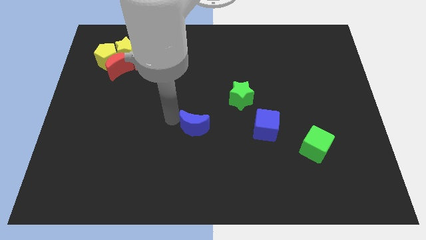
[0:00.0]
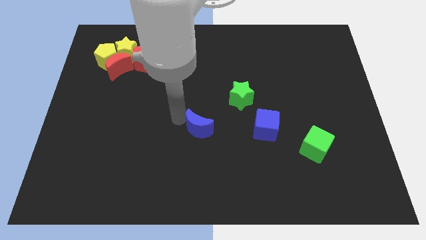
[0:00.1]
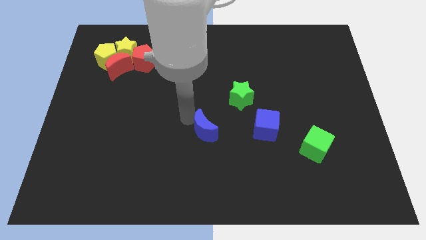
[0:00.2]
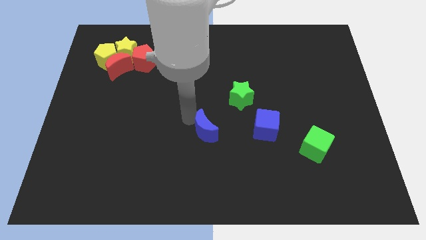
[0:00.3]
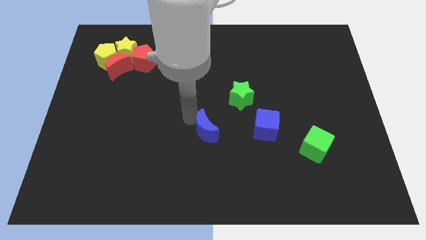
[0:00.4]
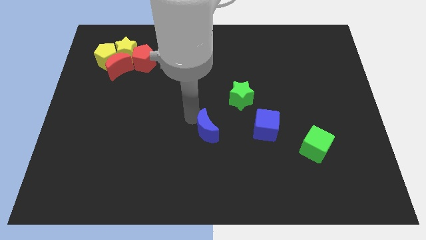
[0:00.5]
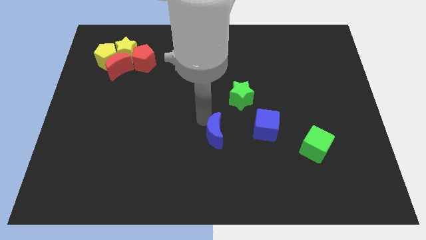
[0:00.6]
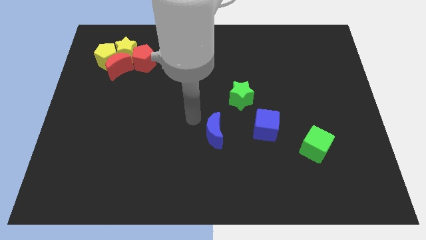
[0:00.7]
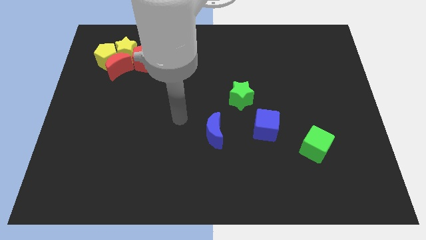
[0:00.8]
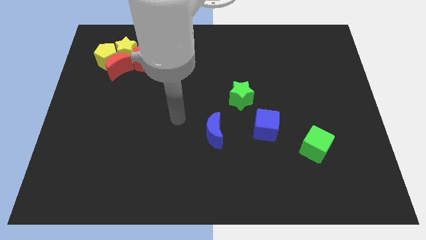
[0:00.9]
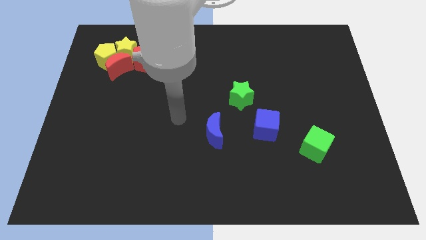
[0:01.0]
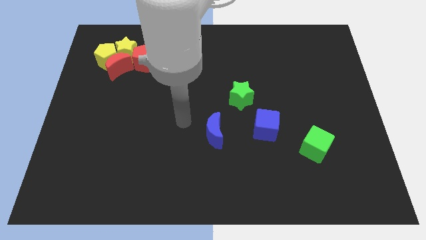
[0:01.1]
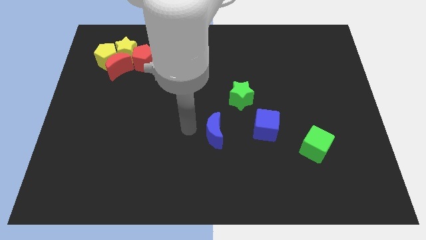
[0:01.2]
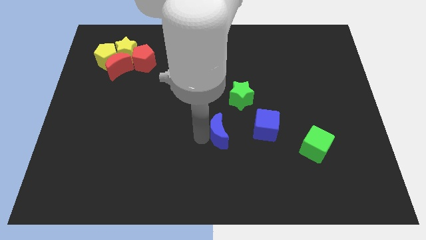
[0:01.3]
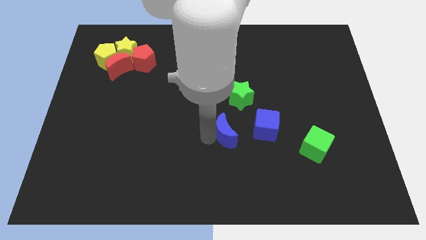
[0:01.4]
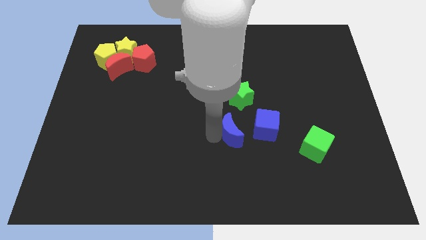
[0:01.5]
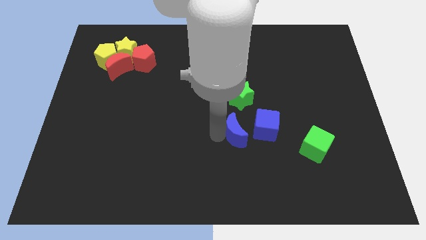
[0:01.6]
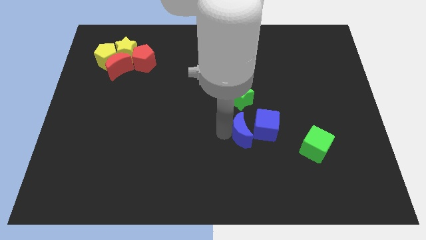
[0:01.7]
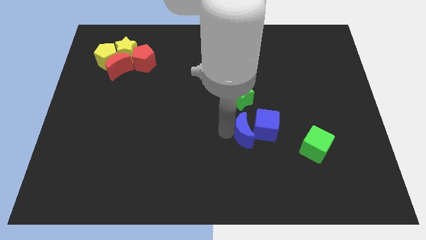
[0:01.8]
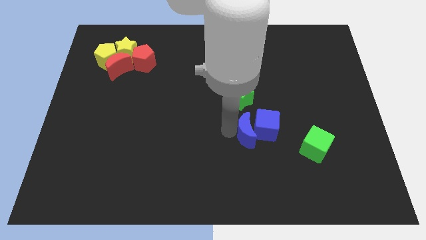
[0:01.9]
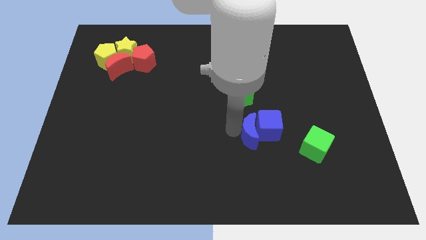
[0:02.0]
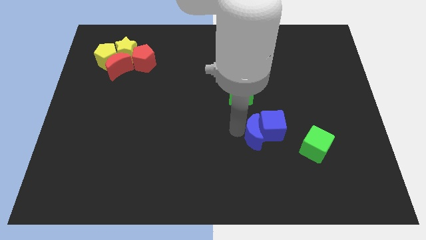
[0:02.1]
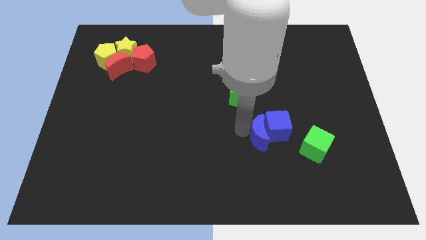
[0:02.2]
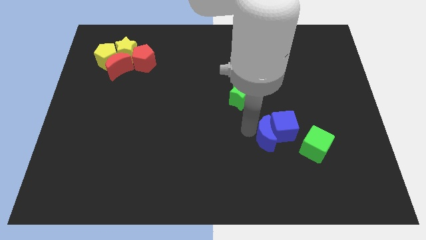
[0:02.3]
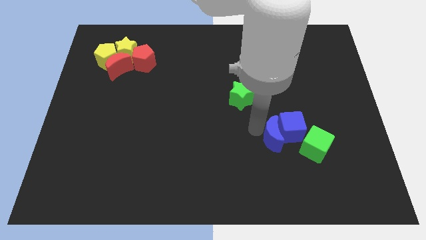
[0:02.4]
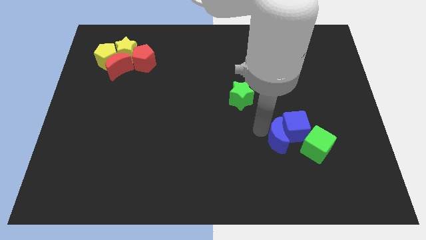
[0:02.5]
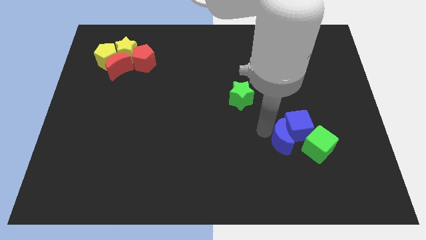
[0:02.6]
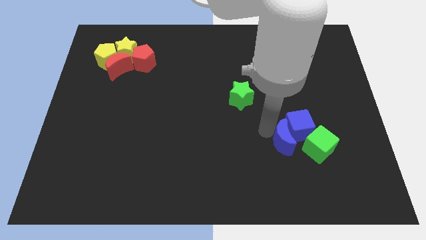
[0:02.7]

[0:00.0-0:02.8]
push the blue moon into the blue cube

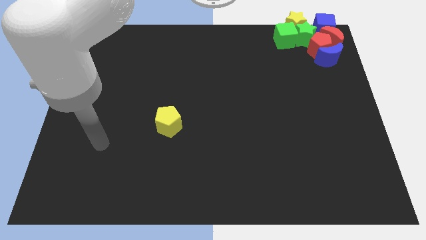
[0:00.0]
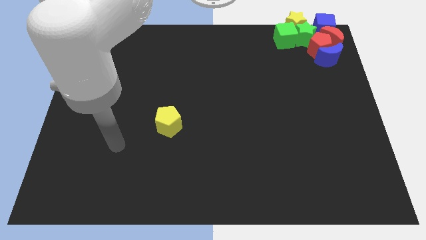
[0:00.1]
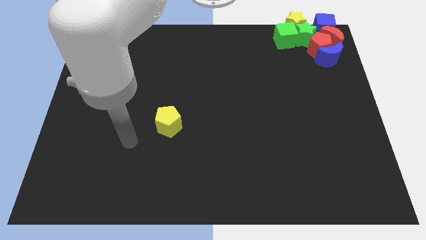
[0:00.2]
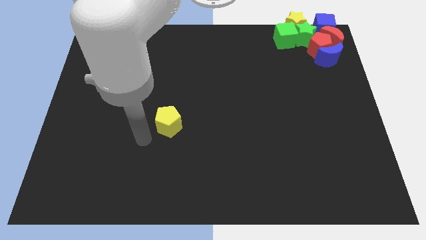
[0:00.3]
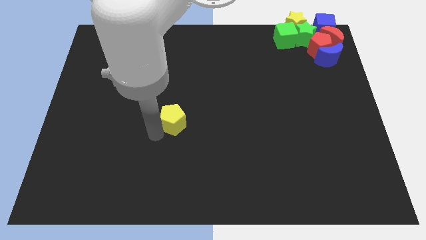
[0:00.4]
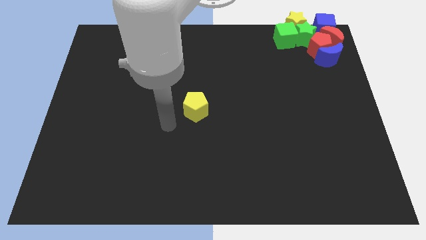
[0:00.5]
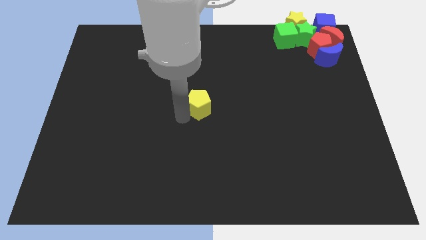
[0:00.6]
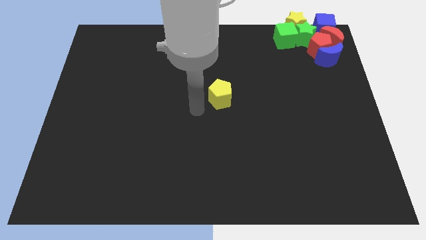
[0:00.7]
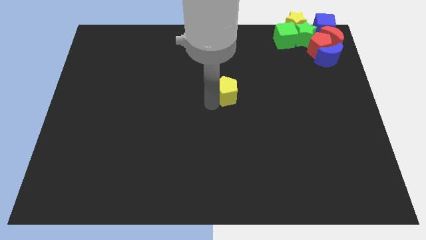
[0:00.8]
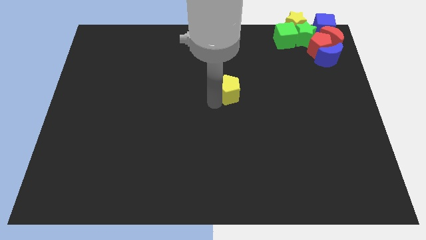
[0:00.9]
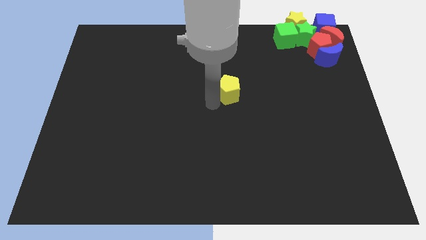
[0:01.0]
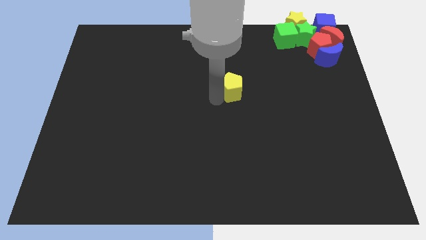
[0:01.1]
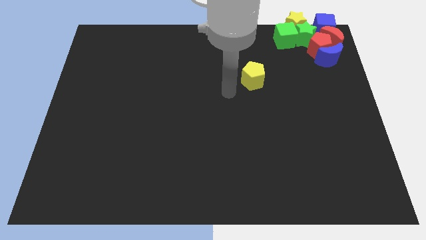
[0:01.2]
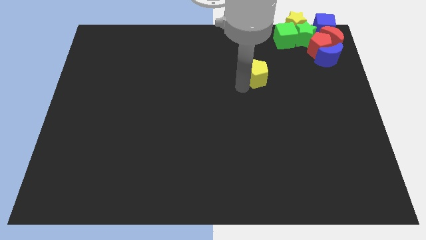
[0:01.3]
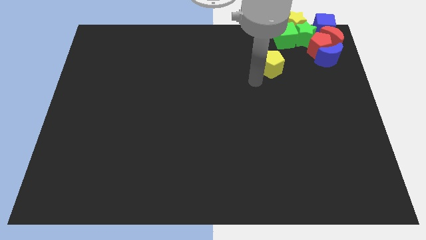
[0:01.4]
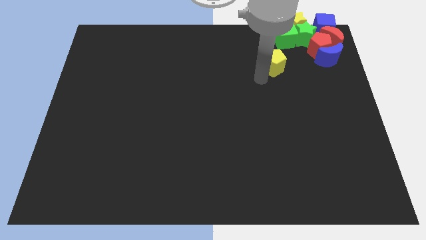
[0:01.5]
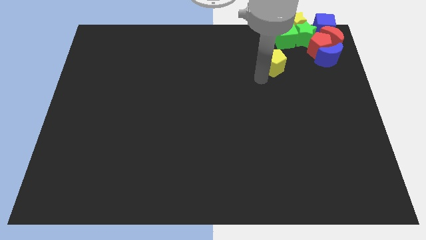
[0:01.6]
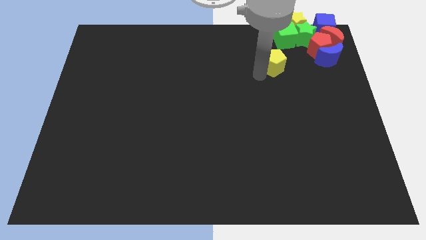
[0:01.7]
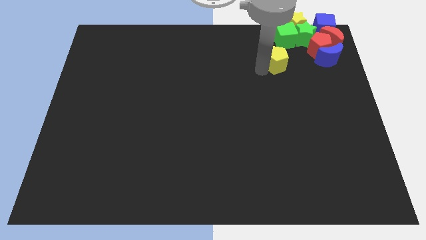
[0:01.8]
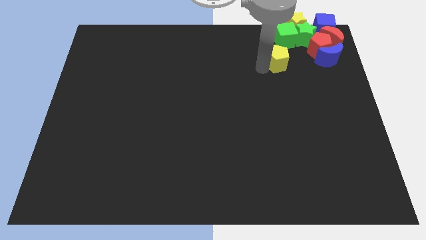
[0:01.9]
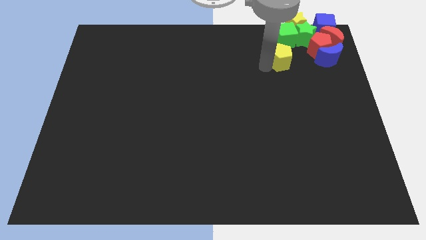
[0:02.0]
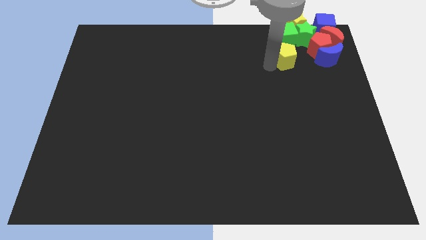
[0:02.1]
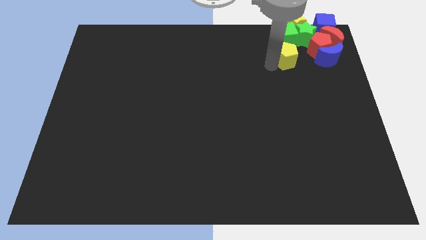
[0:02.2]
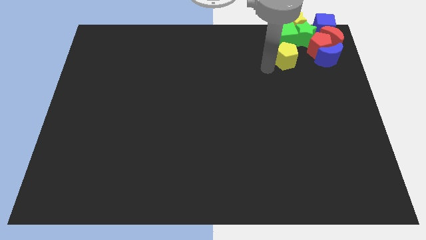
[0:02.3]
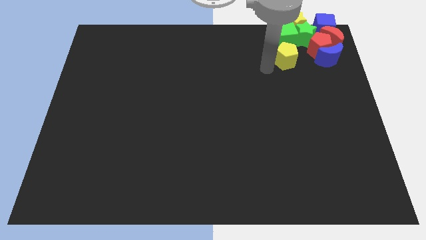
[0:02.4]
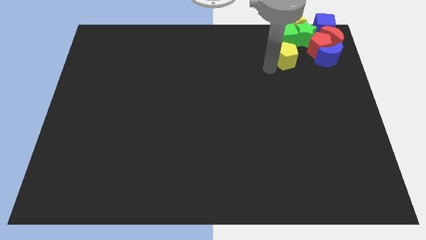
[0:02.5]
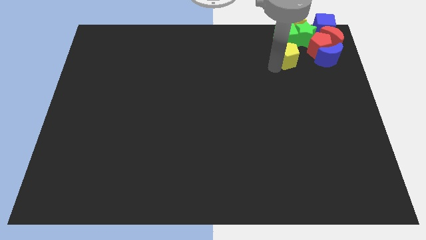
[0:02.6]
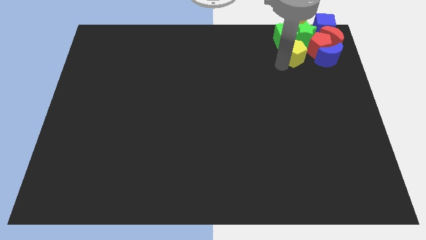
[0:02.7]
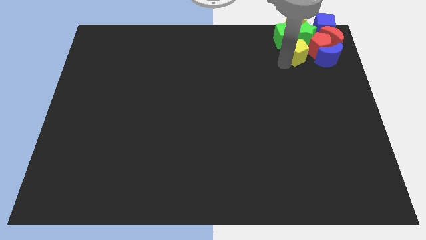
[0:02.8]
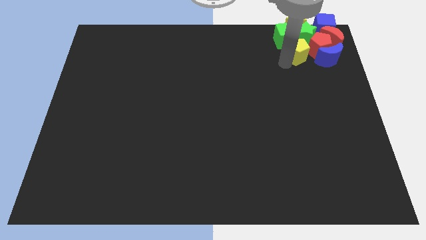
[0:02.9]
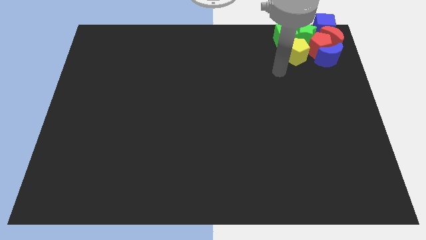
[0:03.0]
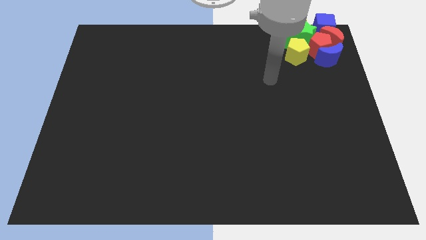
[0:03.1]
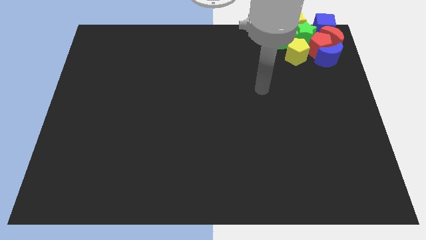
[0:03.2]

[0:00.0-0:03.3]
move yellow pentagon right below the green cube

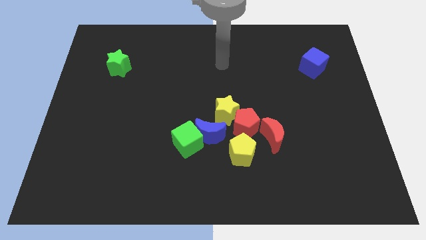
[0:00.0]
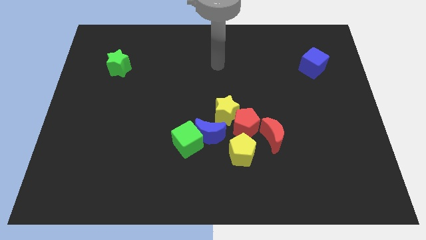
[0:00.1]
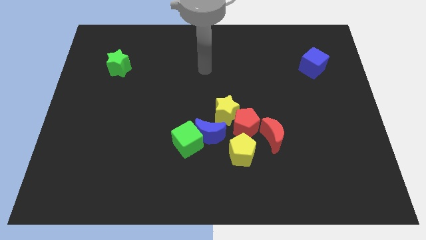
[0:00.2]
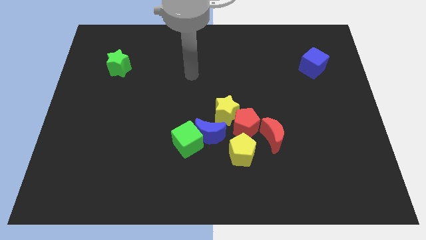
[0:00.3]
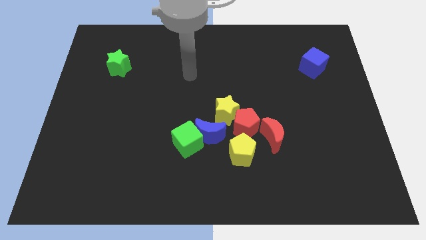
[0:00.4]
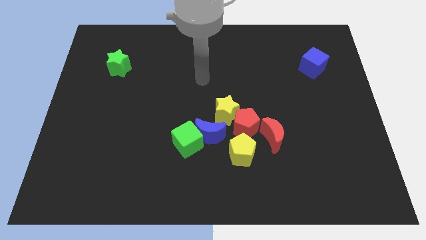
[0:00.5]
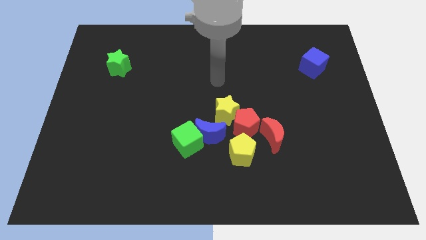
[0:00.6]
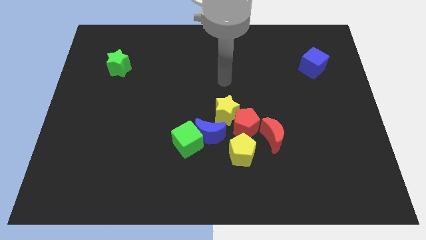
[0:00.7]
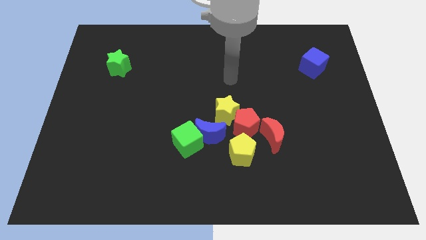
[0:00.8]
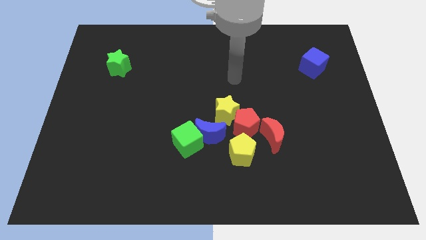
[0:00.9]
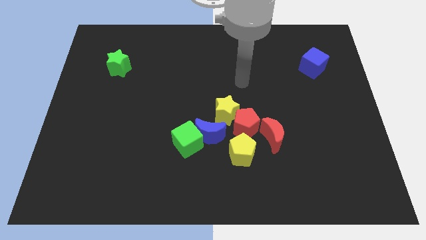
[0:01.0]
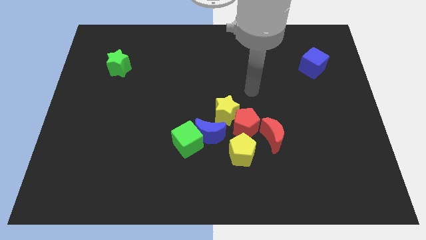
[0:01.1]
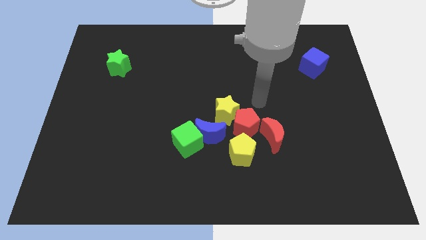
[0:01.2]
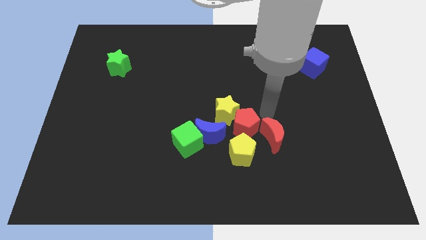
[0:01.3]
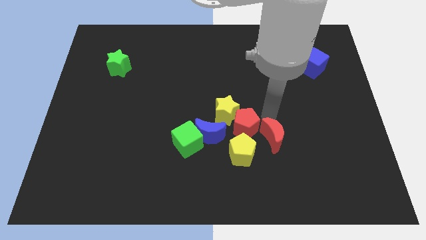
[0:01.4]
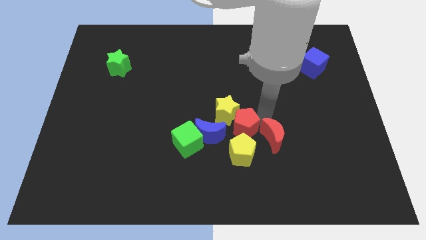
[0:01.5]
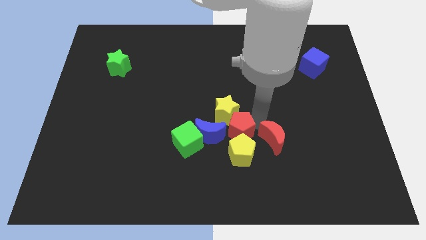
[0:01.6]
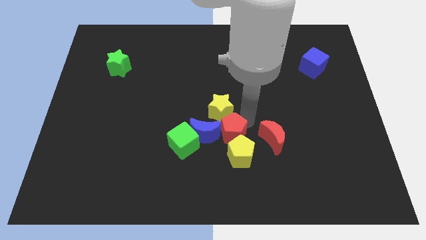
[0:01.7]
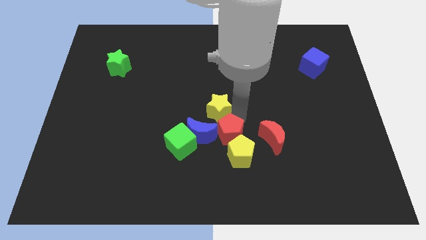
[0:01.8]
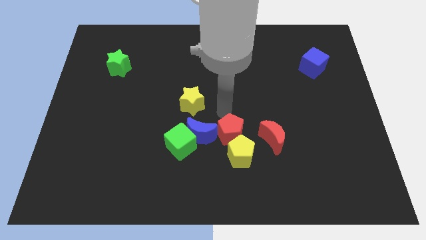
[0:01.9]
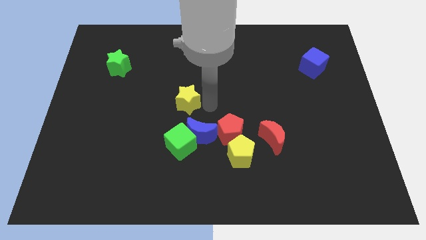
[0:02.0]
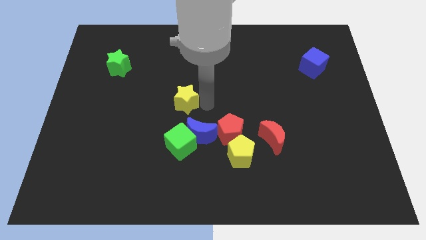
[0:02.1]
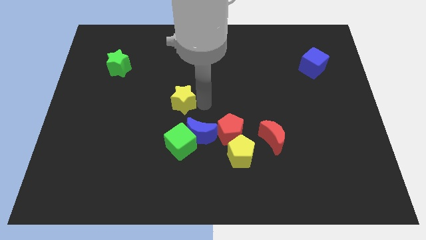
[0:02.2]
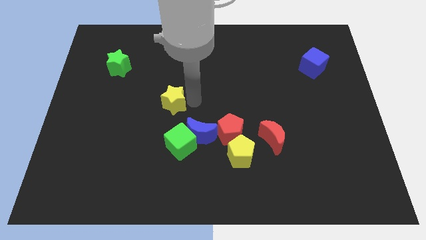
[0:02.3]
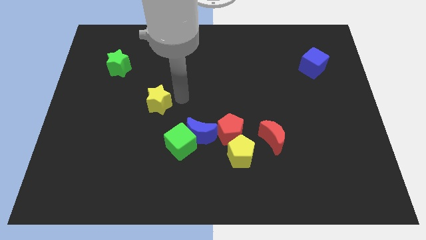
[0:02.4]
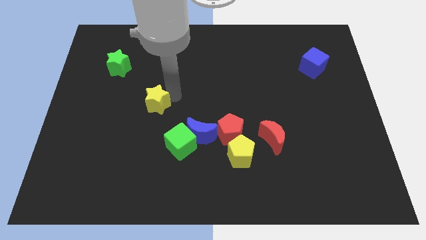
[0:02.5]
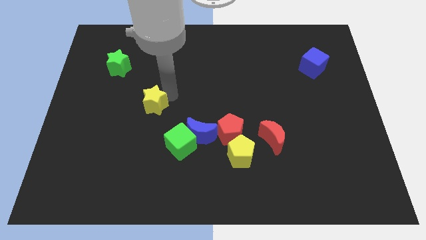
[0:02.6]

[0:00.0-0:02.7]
move the yellow star towards the center left of the board
